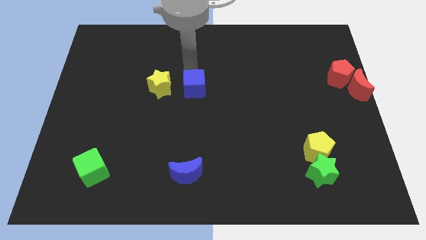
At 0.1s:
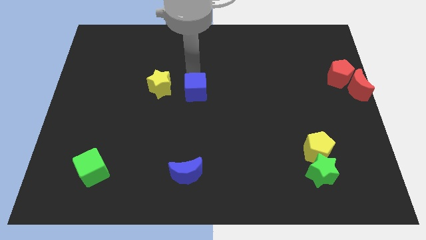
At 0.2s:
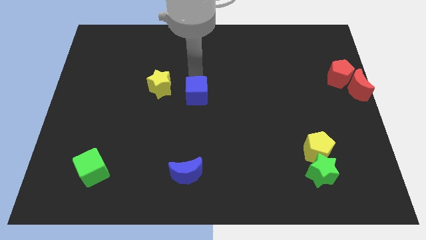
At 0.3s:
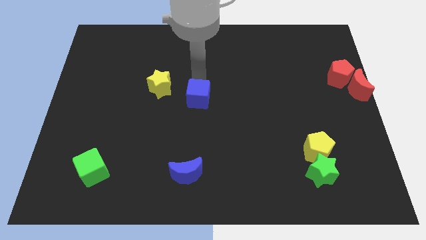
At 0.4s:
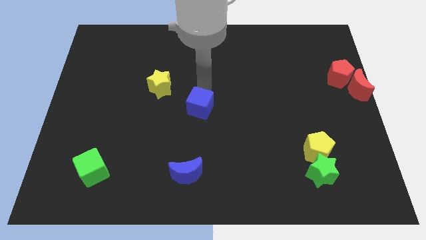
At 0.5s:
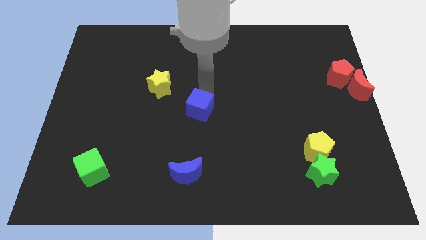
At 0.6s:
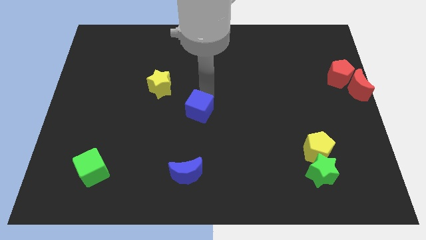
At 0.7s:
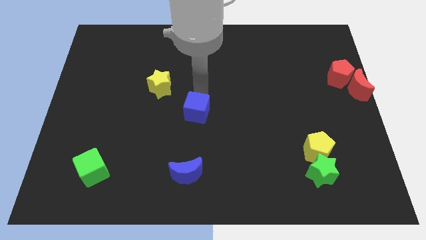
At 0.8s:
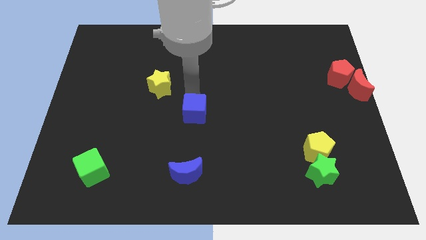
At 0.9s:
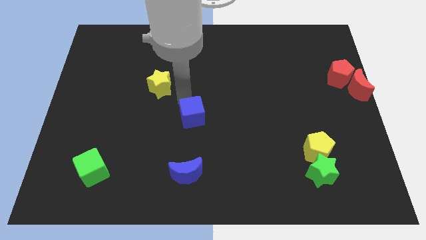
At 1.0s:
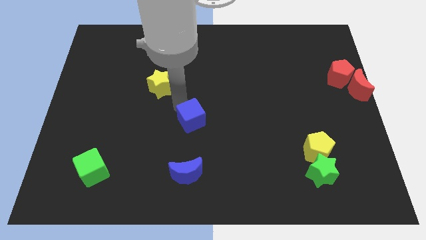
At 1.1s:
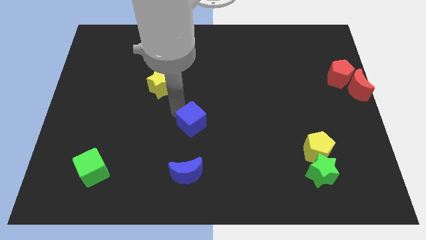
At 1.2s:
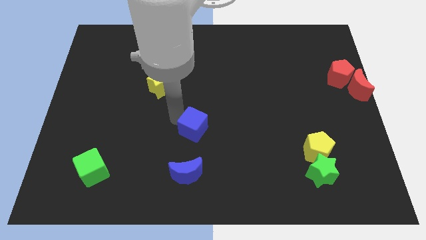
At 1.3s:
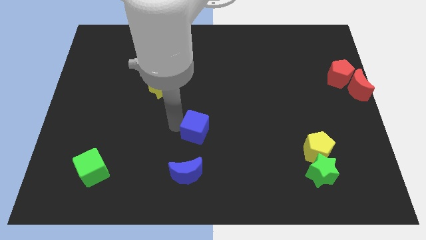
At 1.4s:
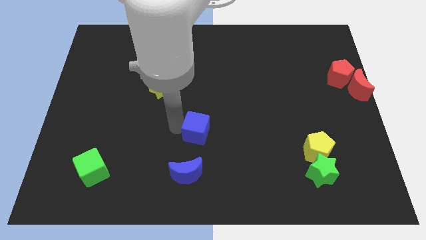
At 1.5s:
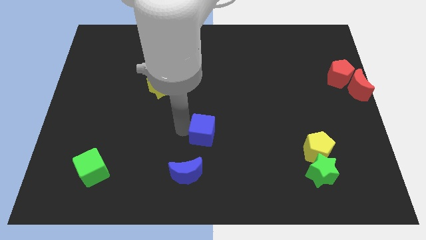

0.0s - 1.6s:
move the blue cube towards the blue moon

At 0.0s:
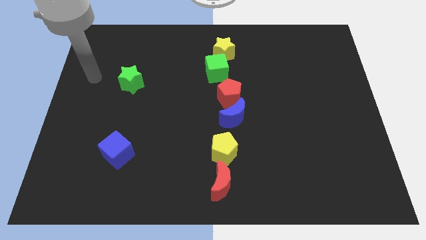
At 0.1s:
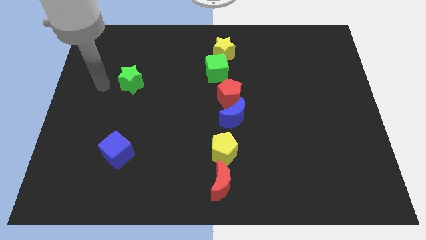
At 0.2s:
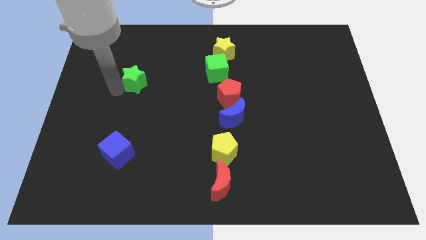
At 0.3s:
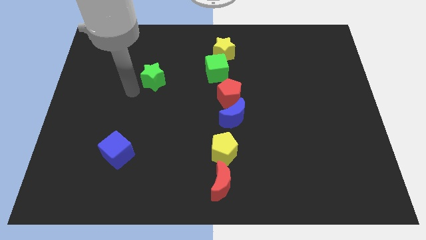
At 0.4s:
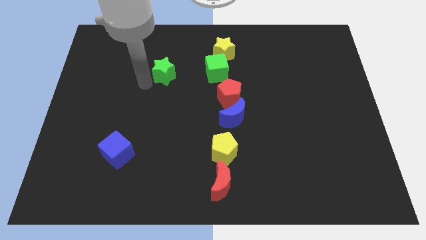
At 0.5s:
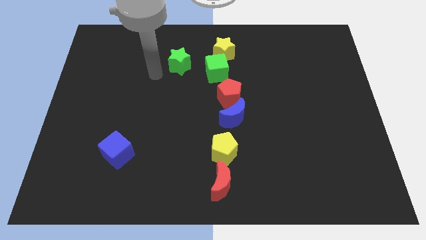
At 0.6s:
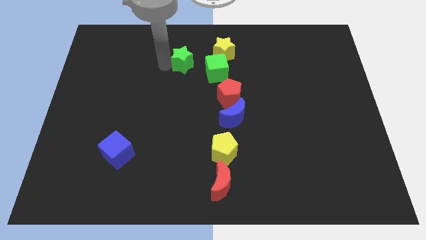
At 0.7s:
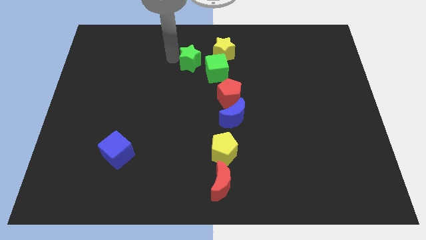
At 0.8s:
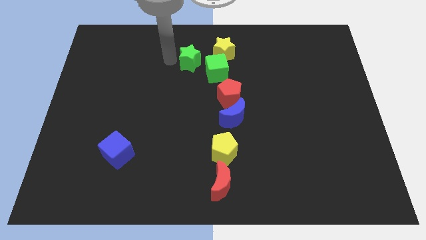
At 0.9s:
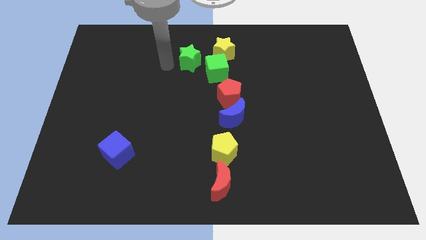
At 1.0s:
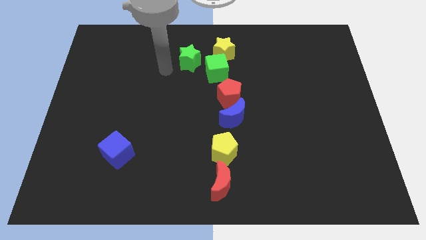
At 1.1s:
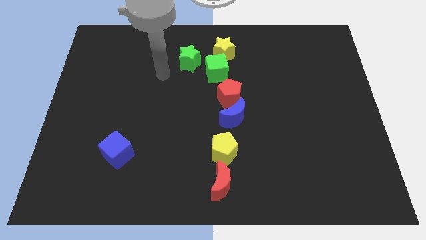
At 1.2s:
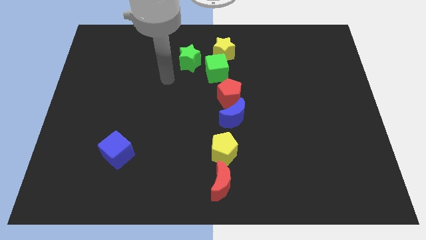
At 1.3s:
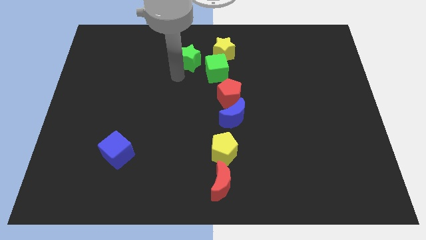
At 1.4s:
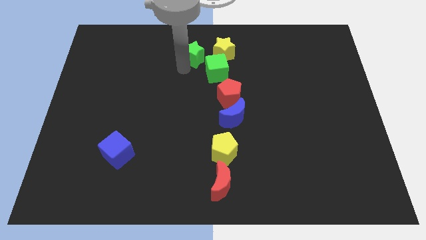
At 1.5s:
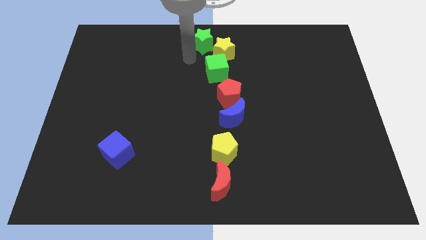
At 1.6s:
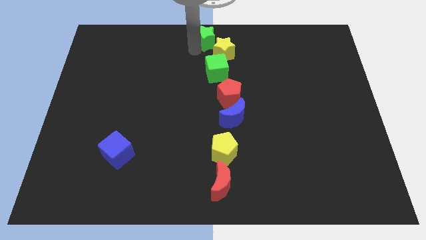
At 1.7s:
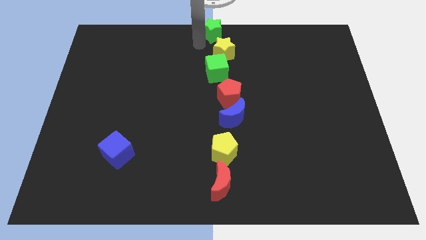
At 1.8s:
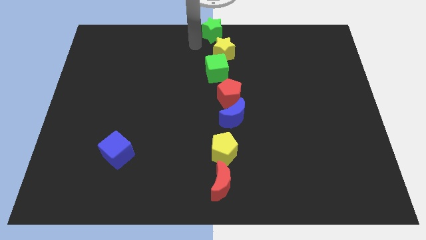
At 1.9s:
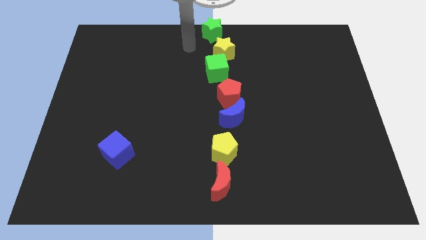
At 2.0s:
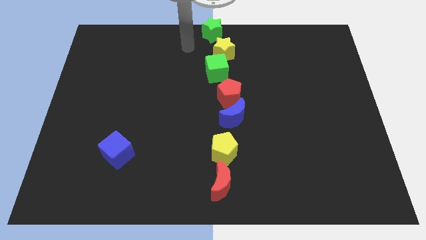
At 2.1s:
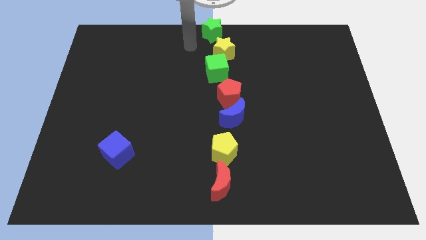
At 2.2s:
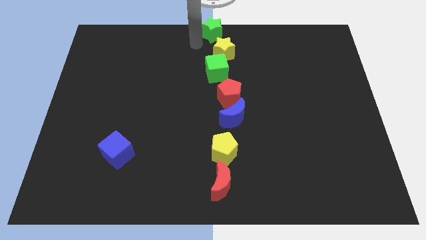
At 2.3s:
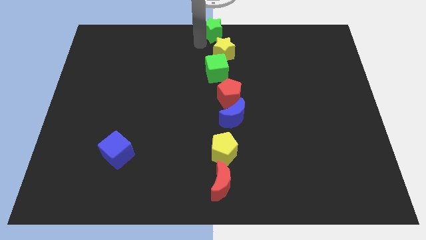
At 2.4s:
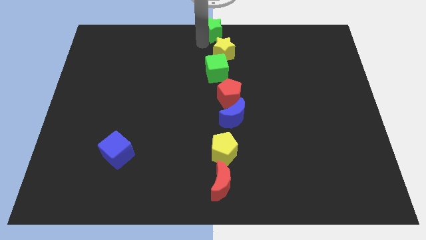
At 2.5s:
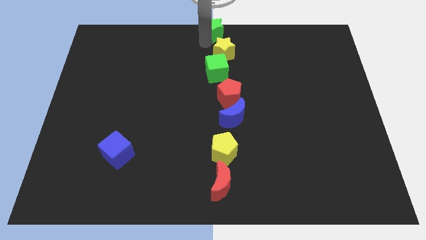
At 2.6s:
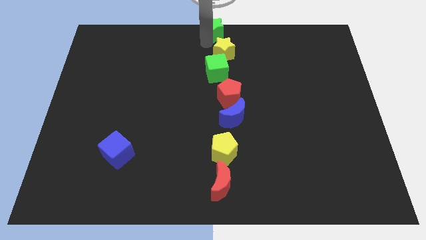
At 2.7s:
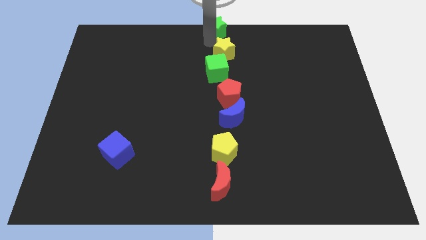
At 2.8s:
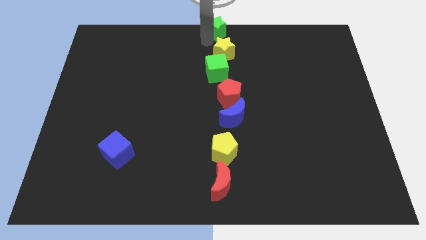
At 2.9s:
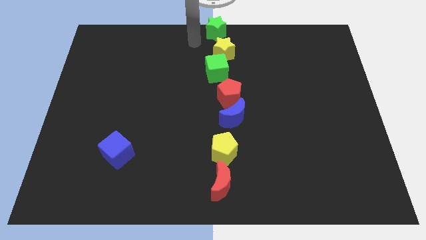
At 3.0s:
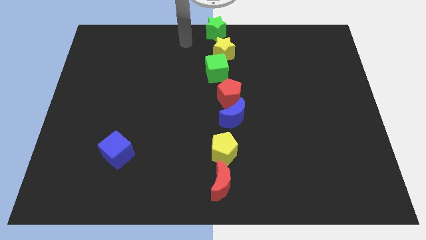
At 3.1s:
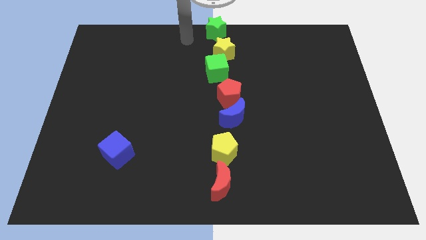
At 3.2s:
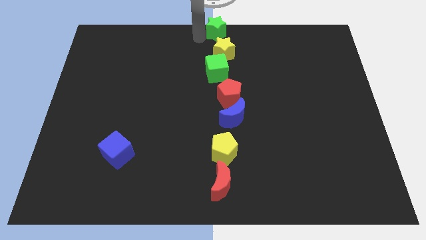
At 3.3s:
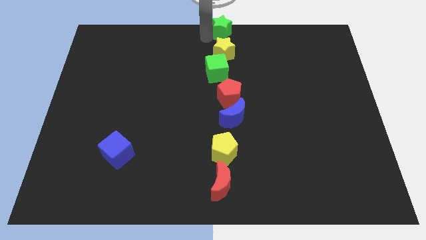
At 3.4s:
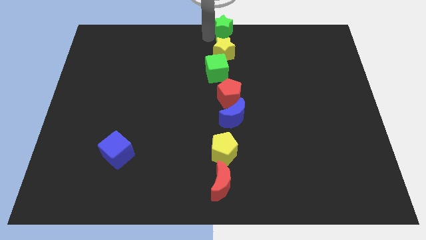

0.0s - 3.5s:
place green star at the top center of the board

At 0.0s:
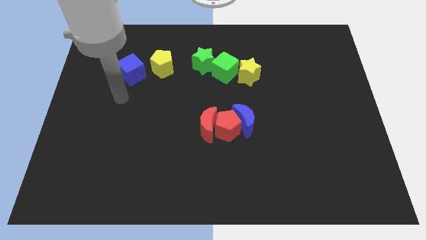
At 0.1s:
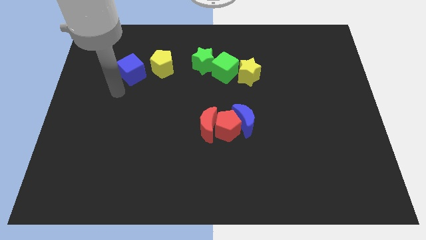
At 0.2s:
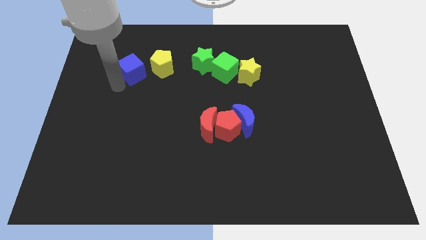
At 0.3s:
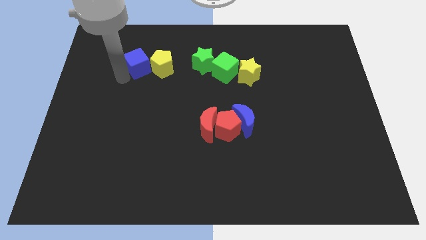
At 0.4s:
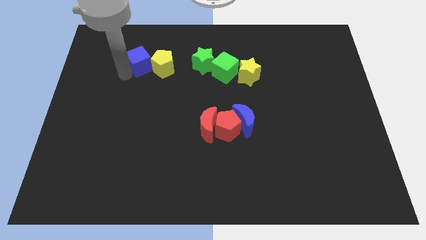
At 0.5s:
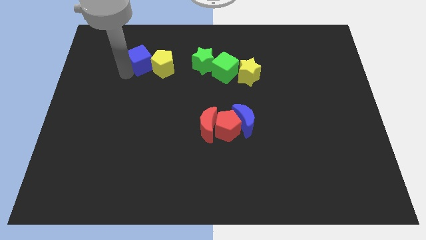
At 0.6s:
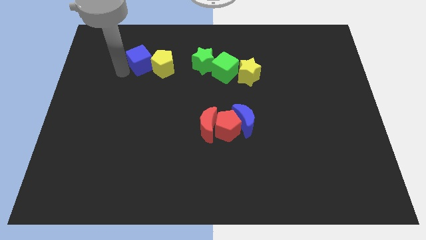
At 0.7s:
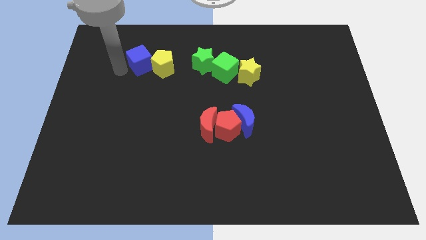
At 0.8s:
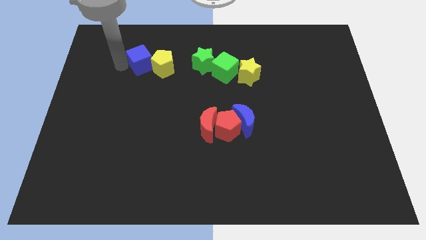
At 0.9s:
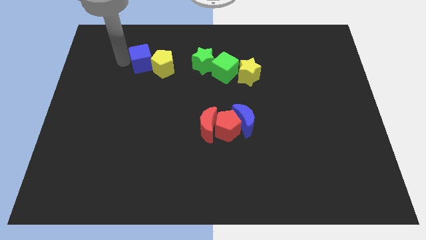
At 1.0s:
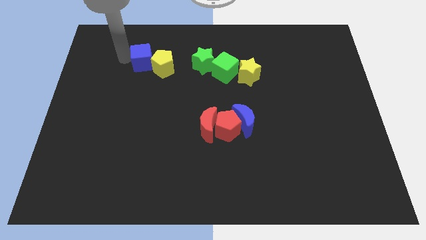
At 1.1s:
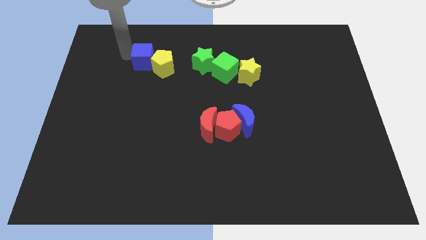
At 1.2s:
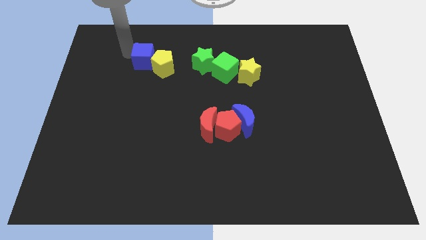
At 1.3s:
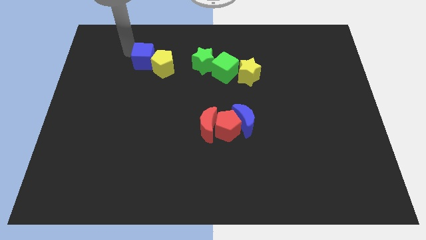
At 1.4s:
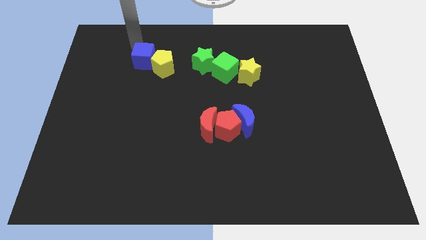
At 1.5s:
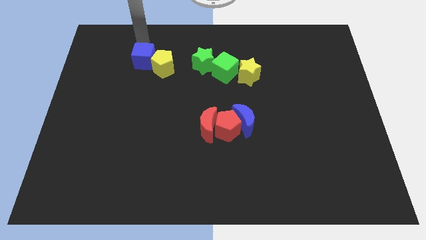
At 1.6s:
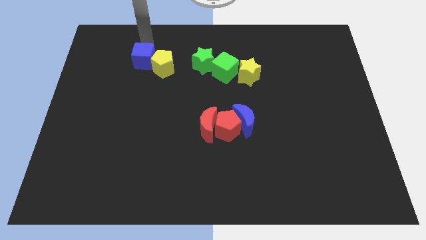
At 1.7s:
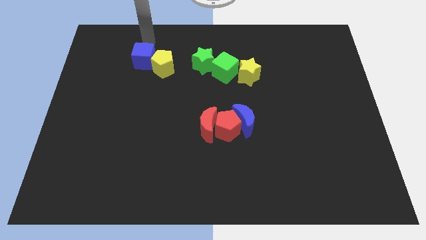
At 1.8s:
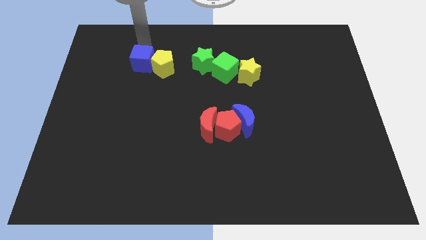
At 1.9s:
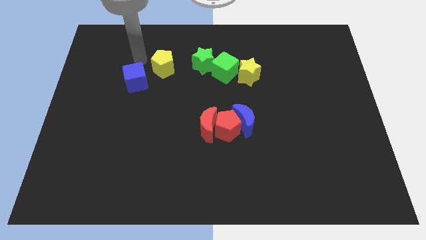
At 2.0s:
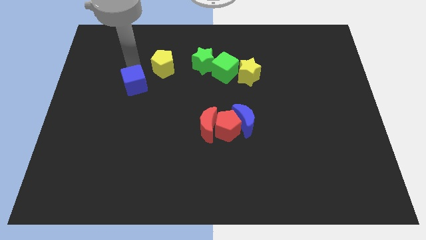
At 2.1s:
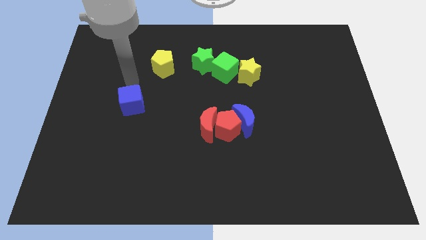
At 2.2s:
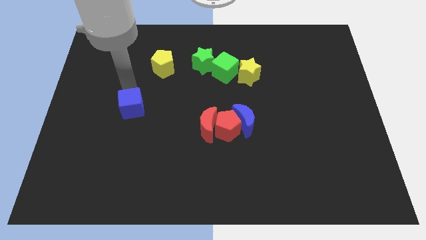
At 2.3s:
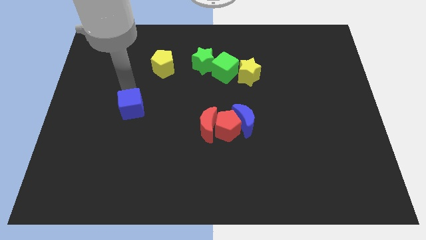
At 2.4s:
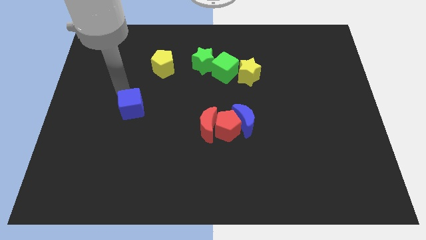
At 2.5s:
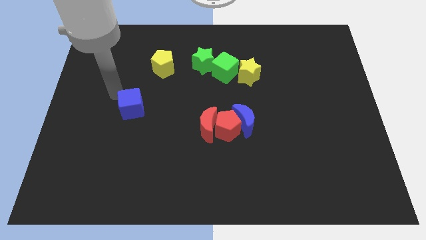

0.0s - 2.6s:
separate the blue cube from the yellow pentagon

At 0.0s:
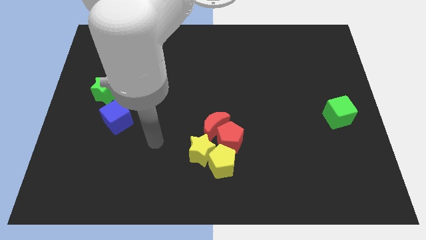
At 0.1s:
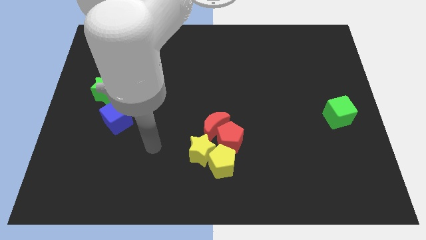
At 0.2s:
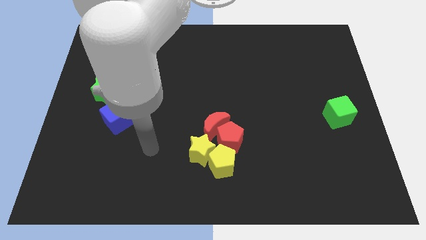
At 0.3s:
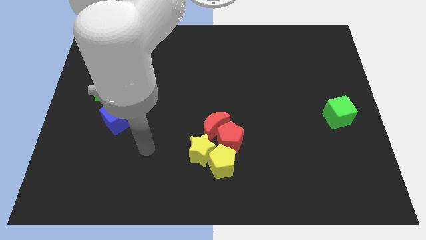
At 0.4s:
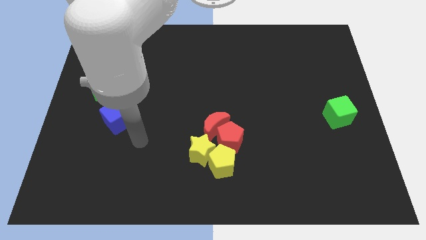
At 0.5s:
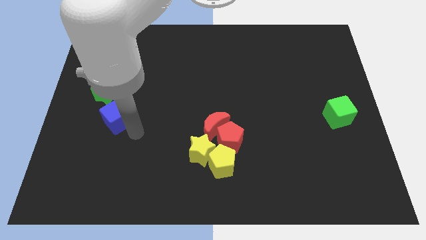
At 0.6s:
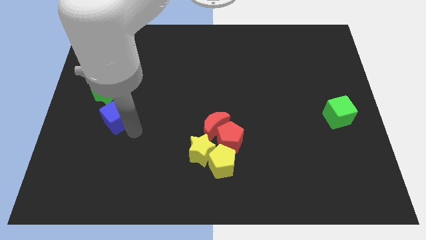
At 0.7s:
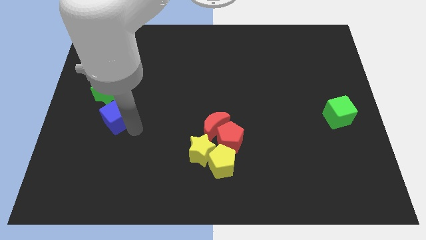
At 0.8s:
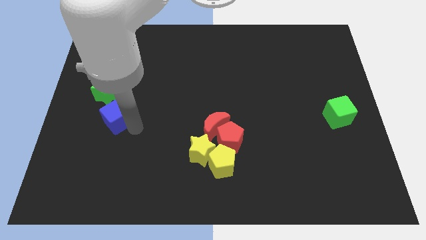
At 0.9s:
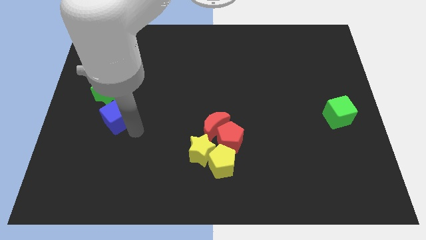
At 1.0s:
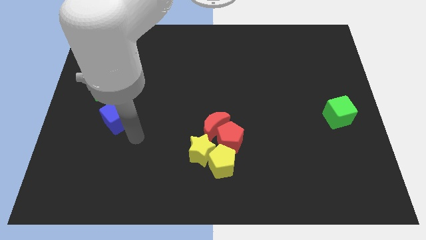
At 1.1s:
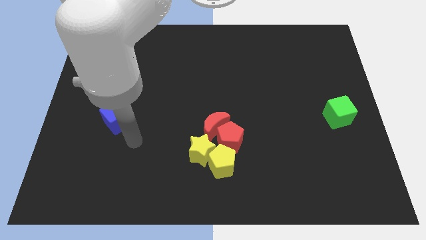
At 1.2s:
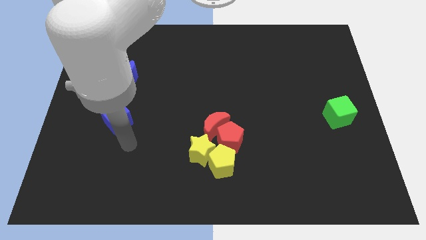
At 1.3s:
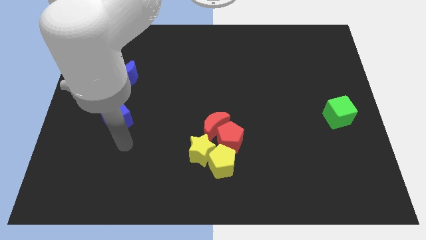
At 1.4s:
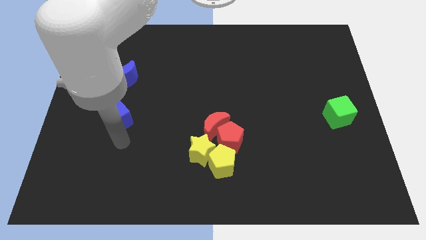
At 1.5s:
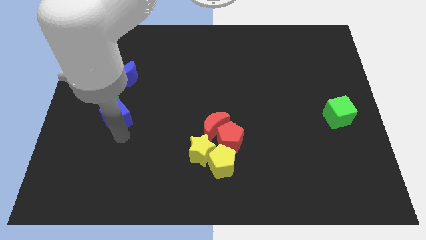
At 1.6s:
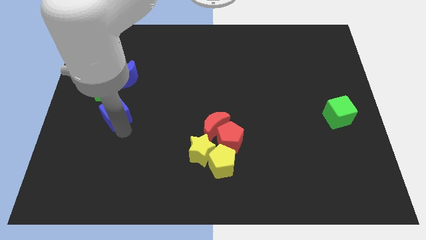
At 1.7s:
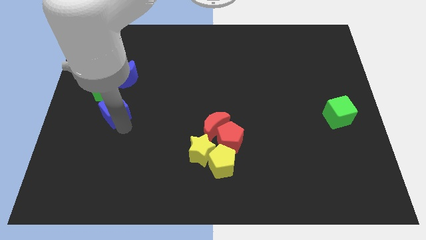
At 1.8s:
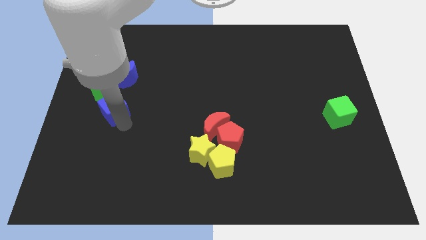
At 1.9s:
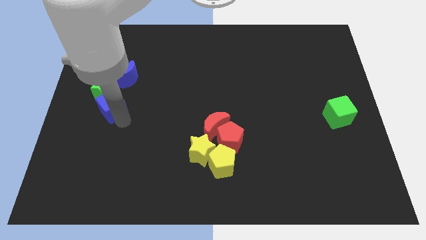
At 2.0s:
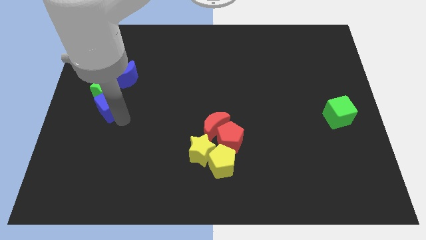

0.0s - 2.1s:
push the blue cube slightly bottom of the green star
